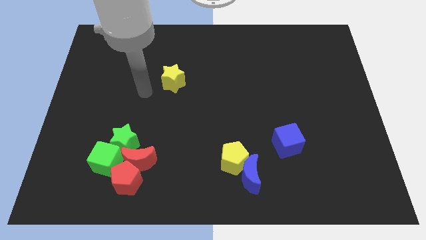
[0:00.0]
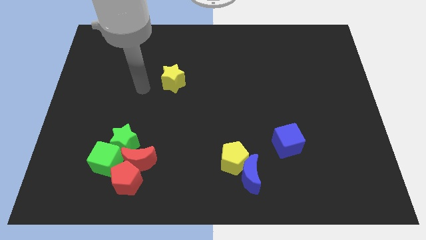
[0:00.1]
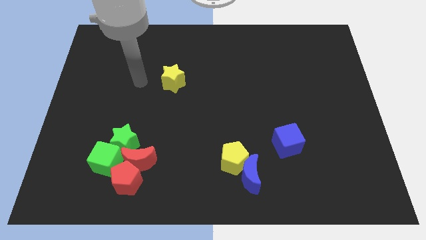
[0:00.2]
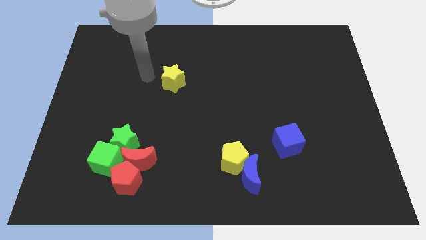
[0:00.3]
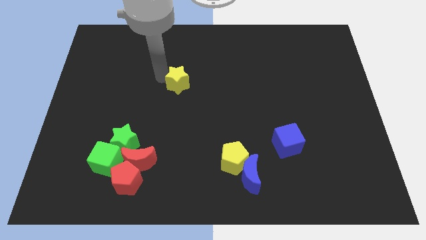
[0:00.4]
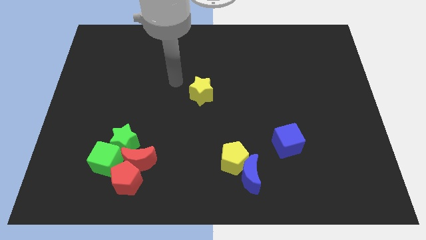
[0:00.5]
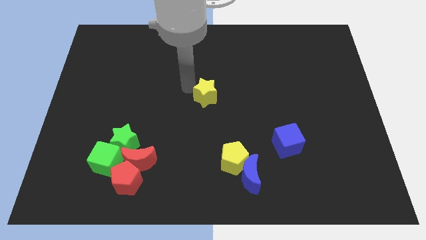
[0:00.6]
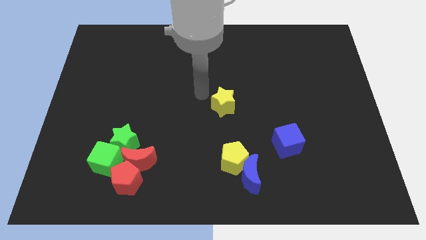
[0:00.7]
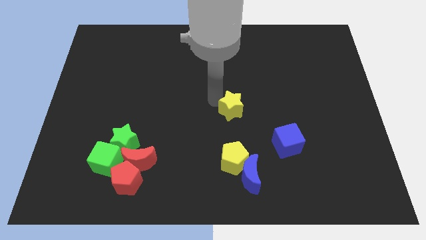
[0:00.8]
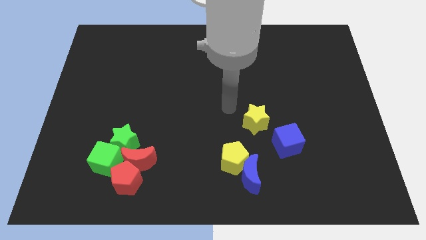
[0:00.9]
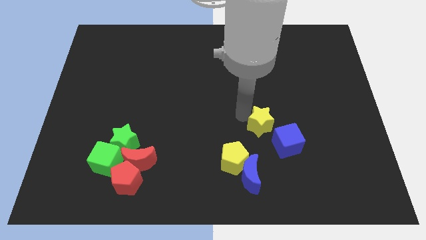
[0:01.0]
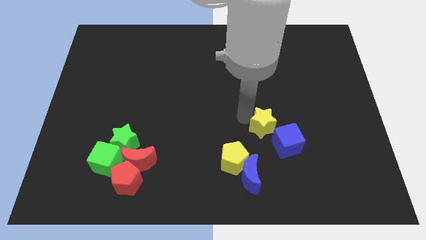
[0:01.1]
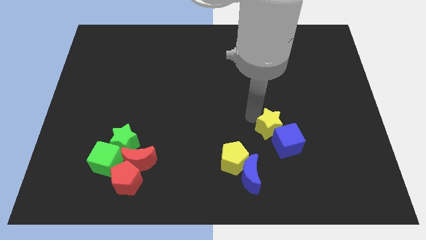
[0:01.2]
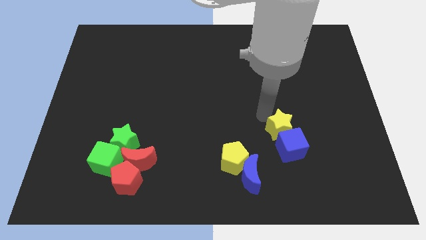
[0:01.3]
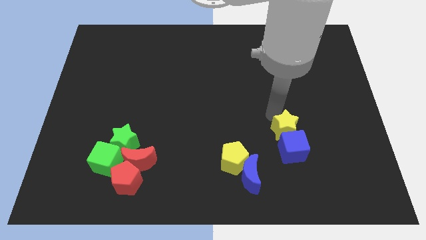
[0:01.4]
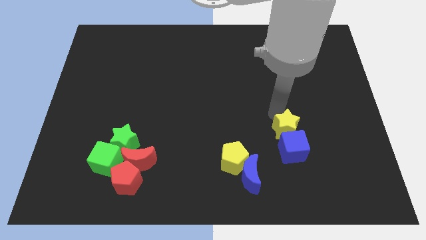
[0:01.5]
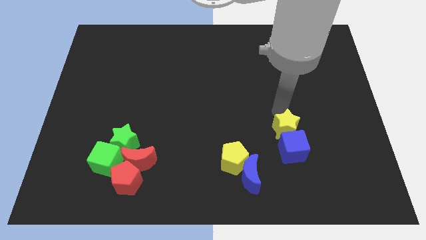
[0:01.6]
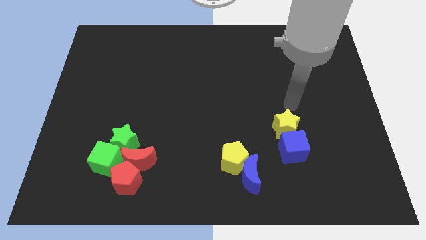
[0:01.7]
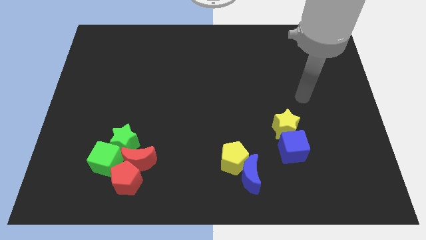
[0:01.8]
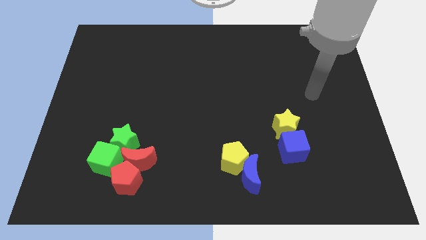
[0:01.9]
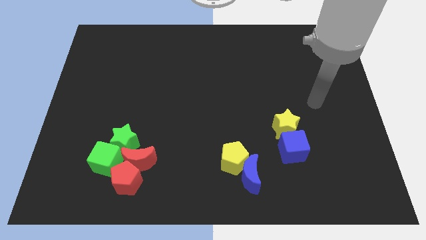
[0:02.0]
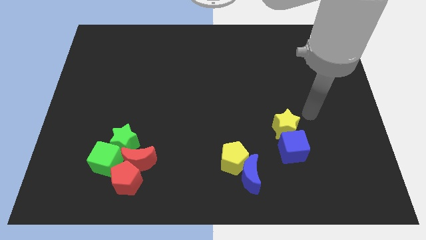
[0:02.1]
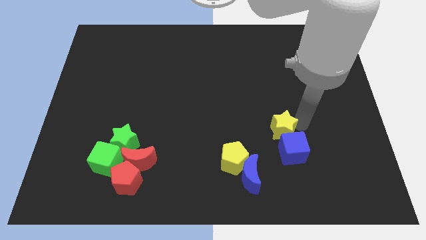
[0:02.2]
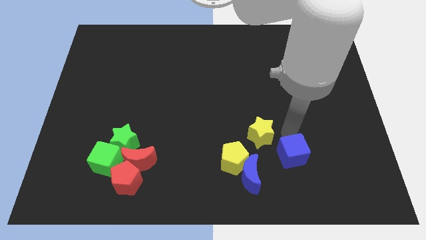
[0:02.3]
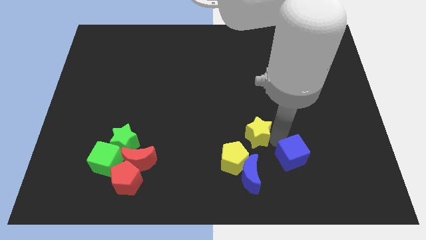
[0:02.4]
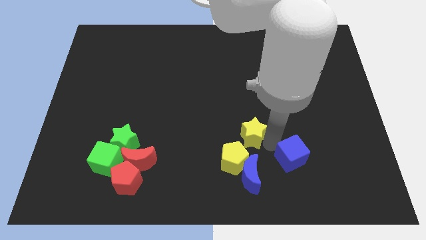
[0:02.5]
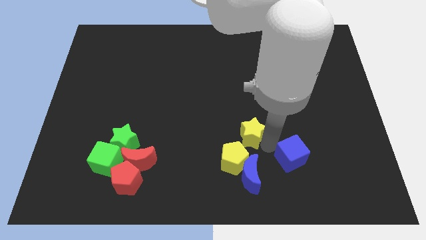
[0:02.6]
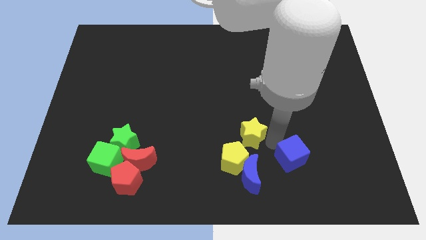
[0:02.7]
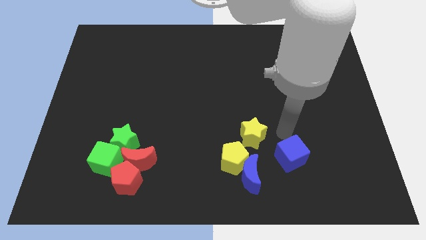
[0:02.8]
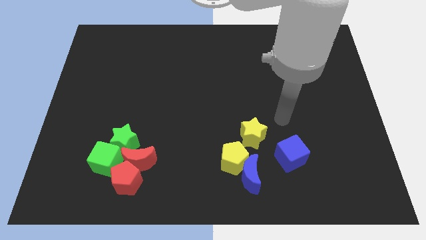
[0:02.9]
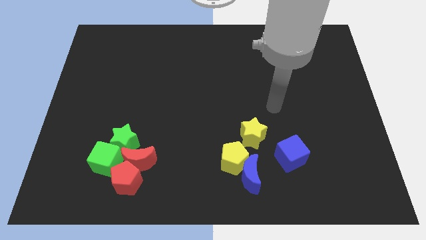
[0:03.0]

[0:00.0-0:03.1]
place the yellow star above the yellow pentagon

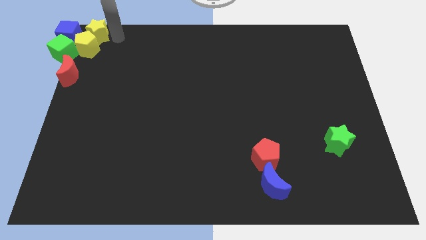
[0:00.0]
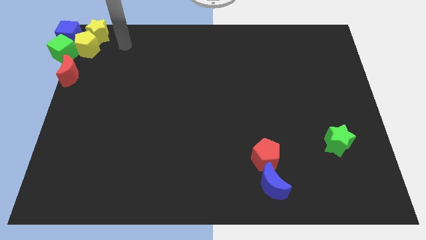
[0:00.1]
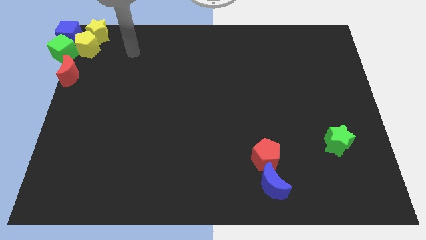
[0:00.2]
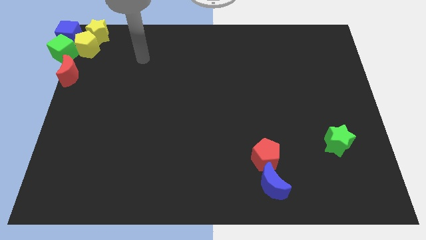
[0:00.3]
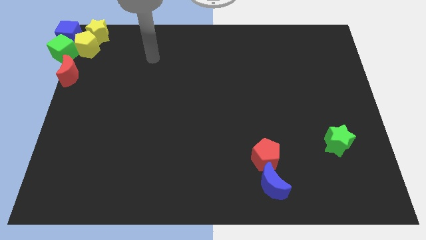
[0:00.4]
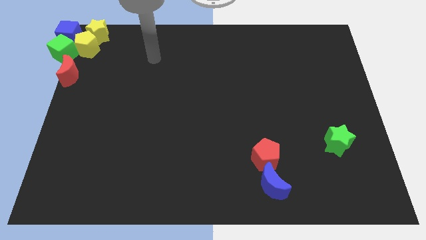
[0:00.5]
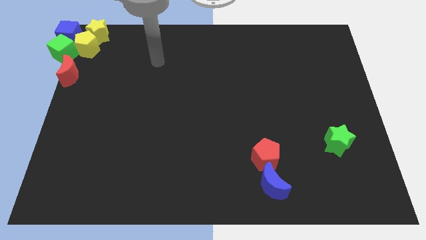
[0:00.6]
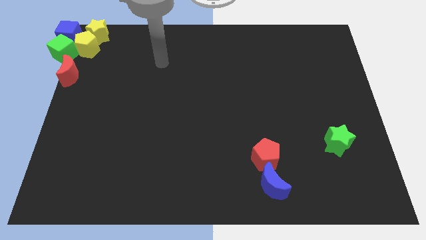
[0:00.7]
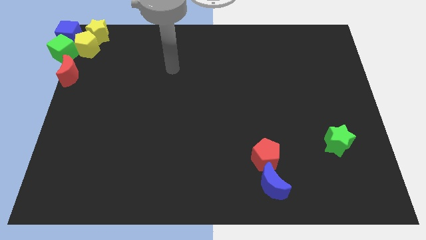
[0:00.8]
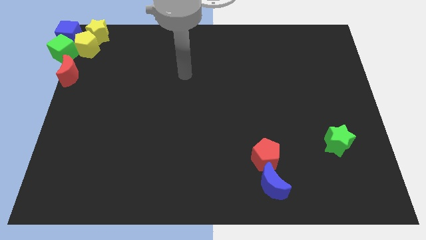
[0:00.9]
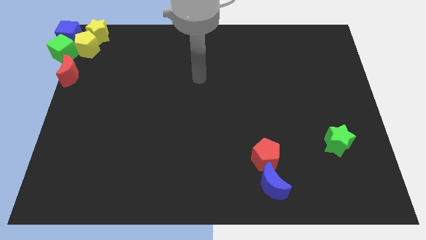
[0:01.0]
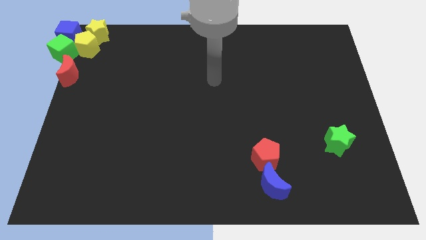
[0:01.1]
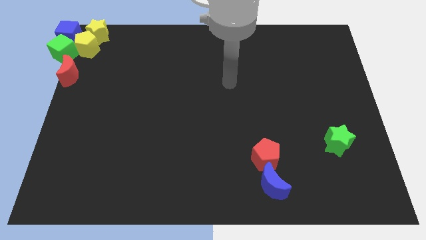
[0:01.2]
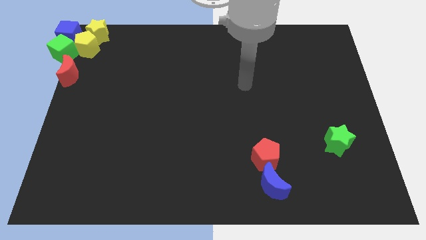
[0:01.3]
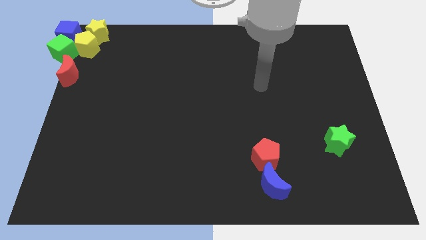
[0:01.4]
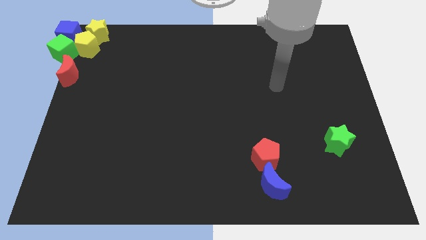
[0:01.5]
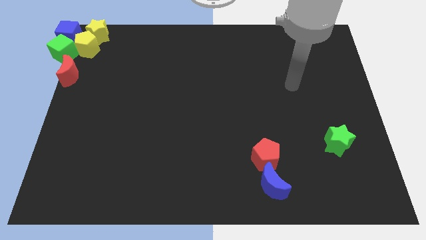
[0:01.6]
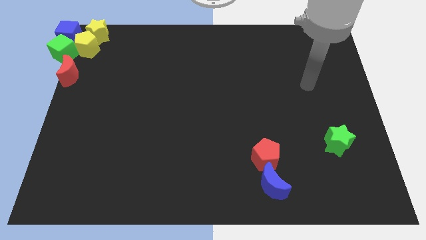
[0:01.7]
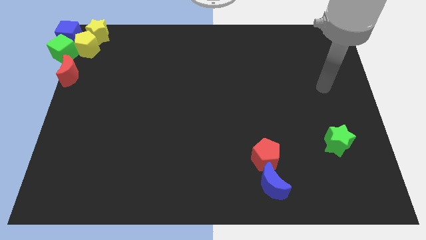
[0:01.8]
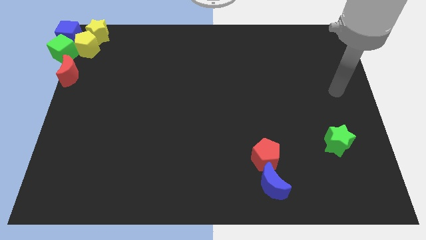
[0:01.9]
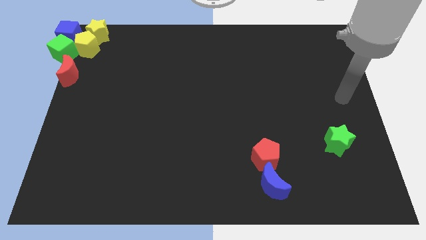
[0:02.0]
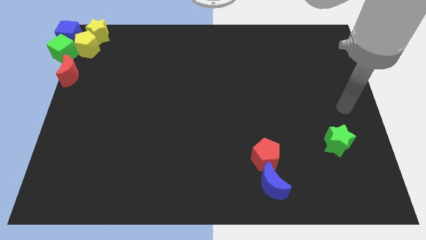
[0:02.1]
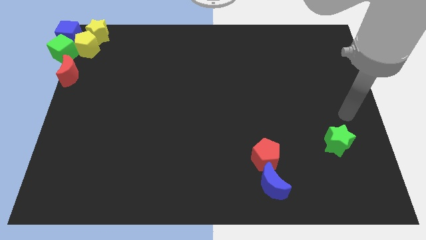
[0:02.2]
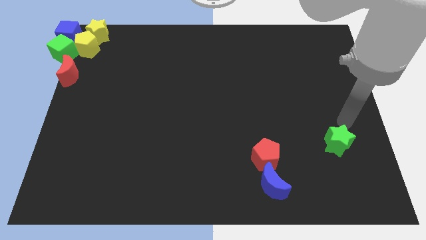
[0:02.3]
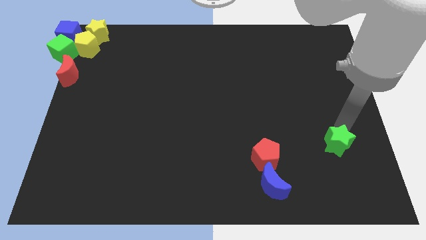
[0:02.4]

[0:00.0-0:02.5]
point your arm at the top of green star

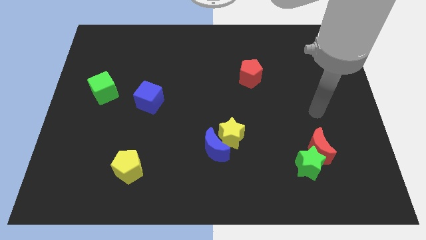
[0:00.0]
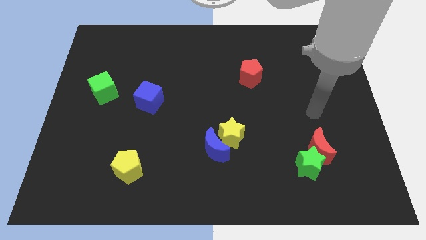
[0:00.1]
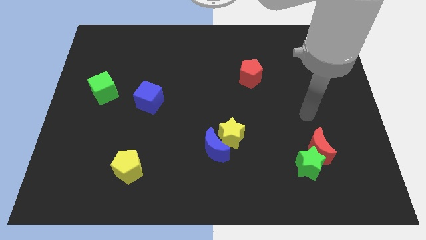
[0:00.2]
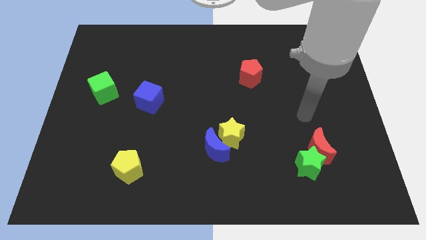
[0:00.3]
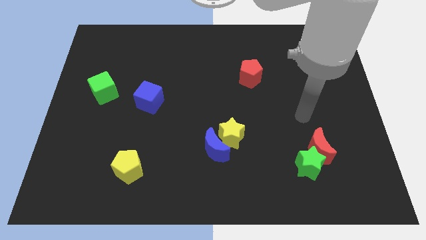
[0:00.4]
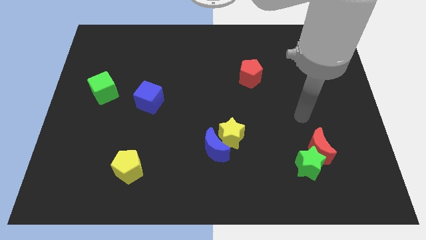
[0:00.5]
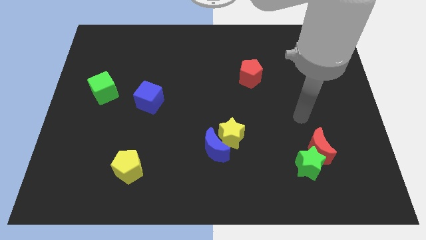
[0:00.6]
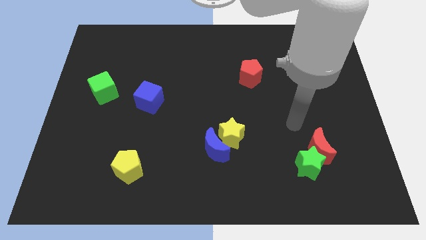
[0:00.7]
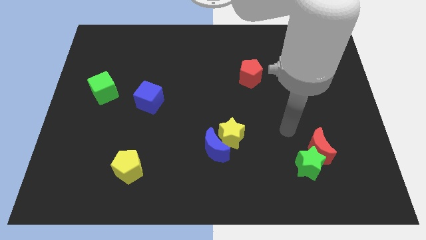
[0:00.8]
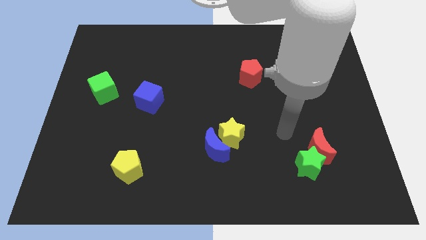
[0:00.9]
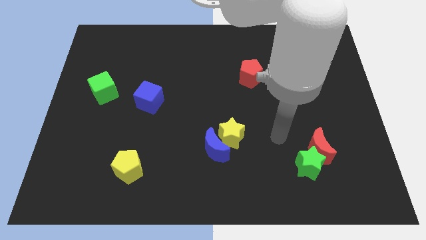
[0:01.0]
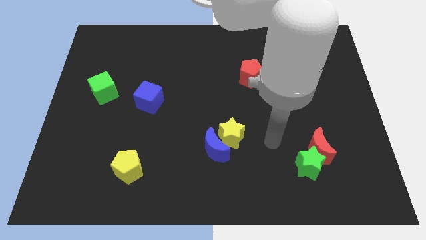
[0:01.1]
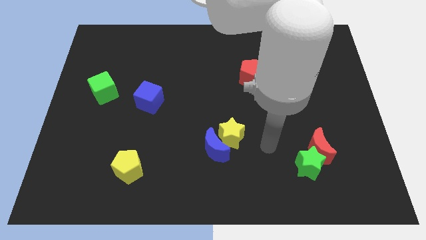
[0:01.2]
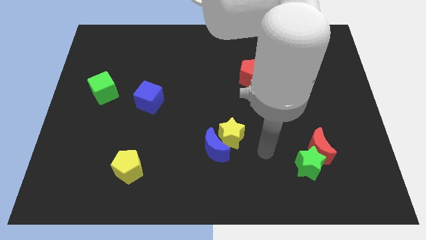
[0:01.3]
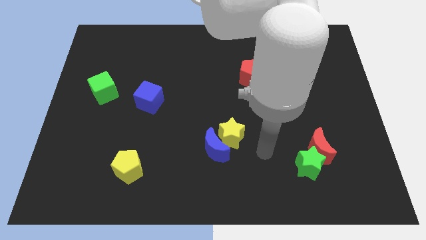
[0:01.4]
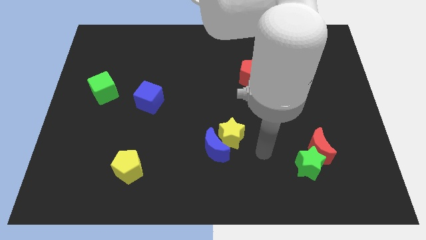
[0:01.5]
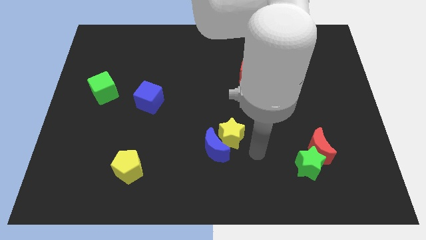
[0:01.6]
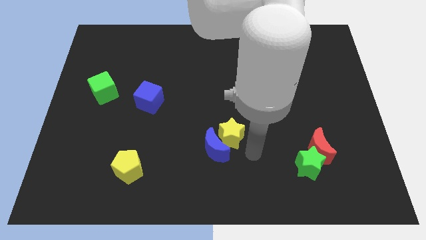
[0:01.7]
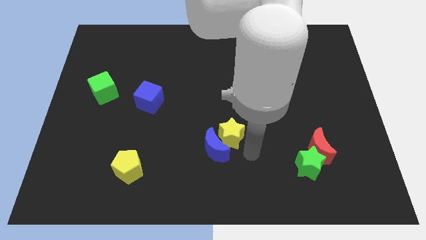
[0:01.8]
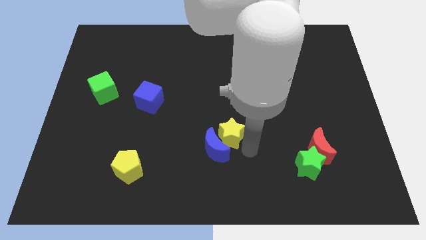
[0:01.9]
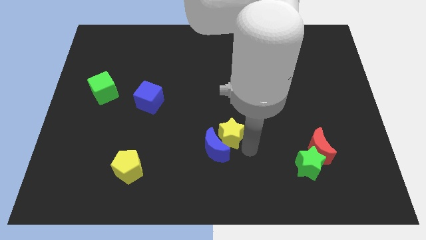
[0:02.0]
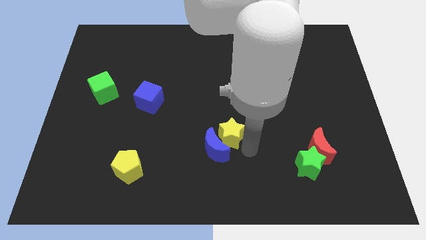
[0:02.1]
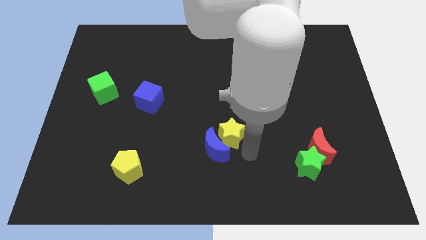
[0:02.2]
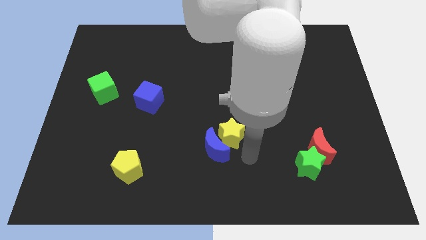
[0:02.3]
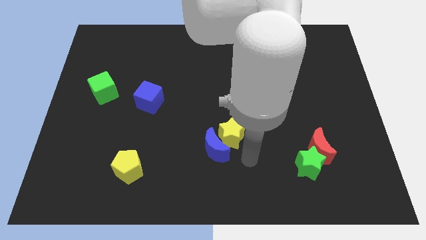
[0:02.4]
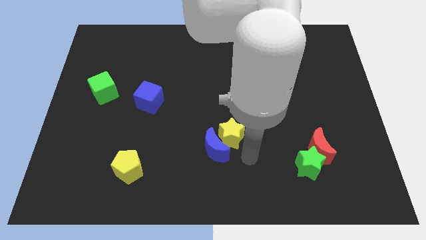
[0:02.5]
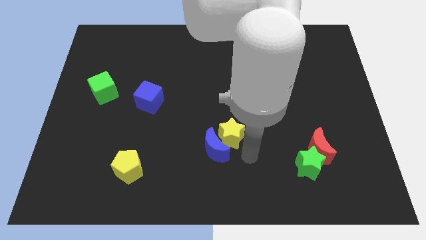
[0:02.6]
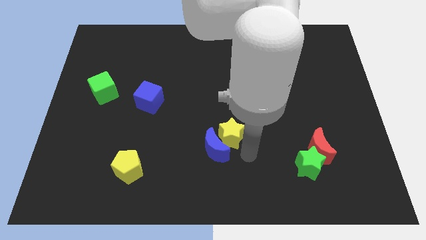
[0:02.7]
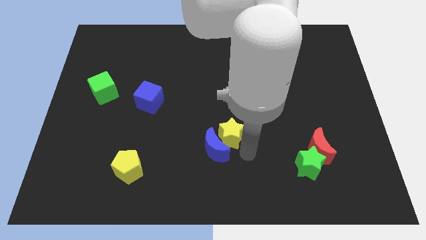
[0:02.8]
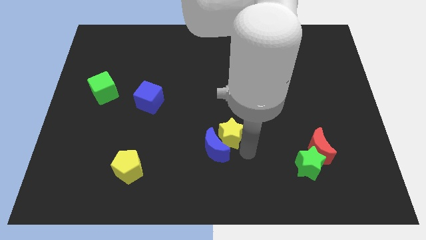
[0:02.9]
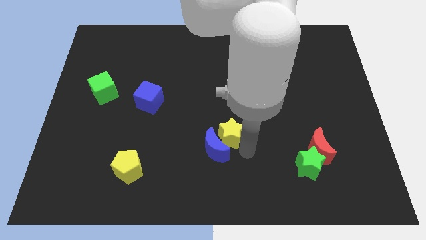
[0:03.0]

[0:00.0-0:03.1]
place your arm at the bottom right side of the yellow star

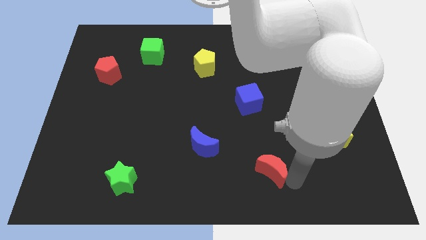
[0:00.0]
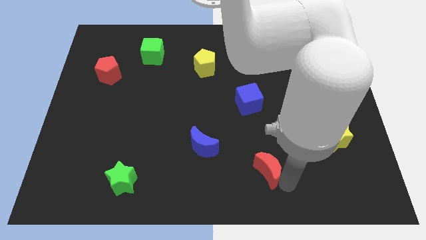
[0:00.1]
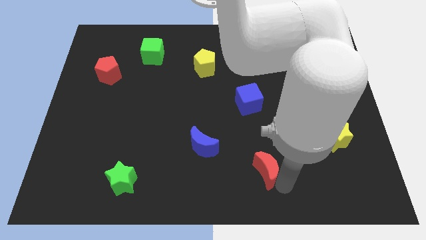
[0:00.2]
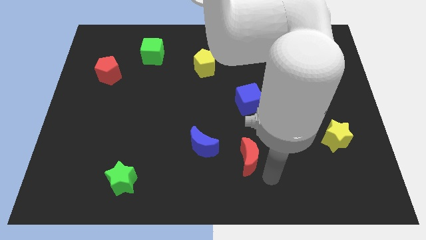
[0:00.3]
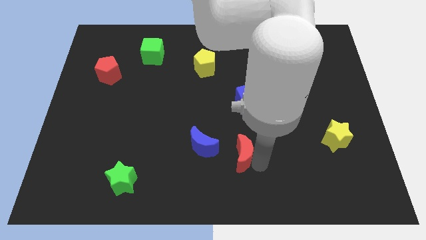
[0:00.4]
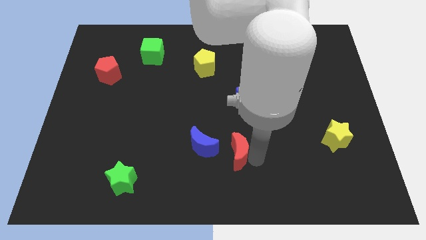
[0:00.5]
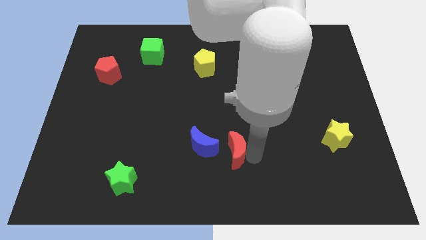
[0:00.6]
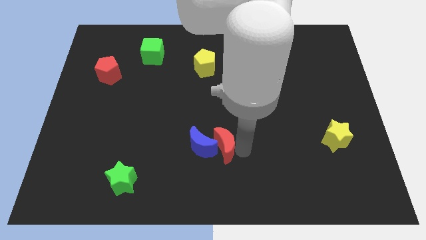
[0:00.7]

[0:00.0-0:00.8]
push red moon into the blue moon
